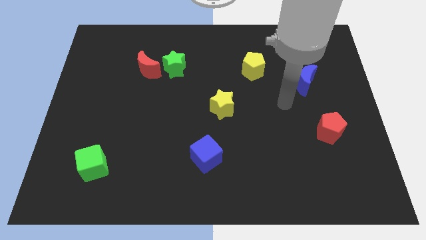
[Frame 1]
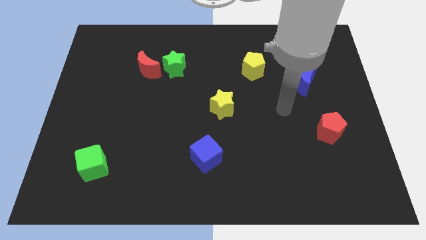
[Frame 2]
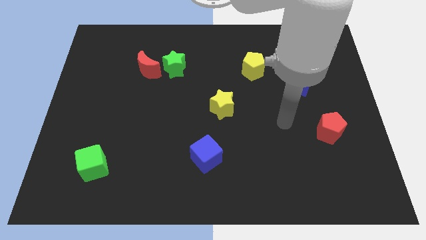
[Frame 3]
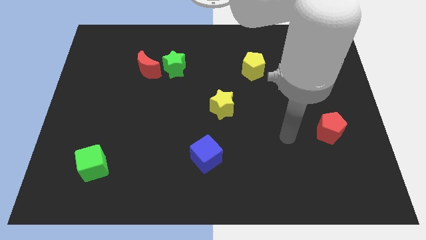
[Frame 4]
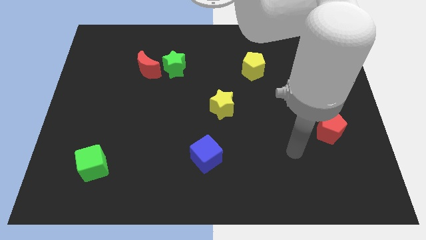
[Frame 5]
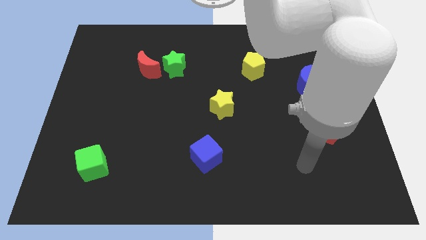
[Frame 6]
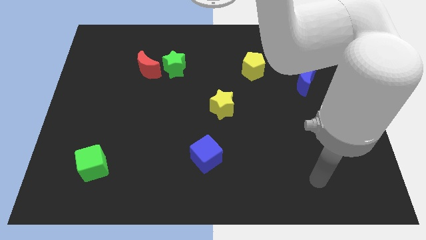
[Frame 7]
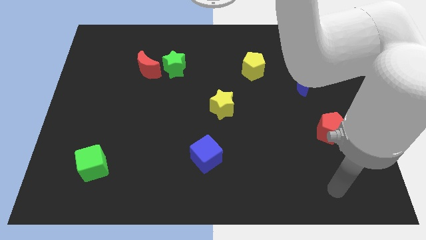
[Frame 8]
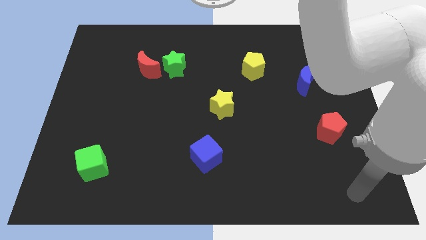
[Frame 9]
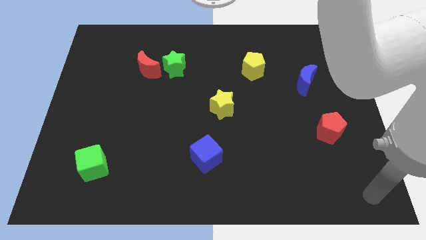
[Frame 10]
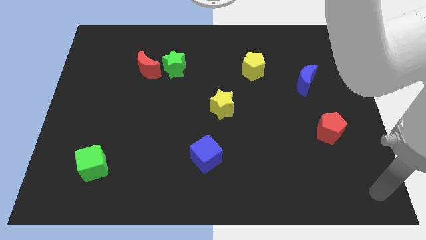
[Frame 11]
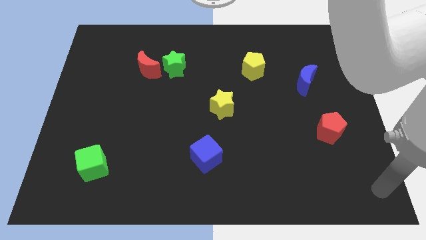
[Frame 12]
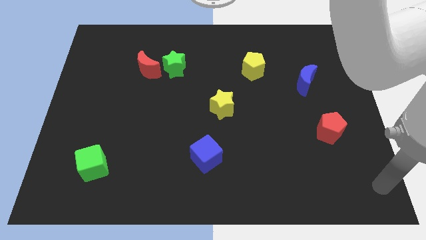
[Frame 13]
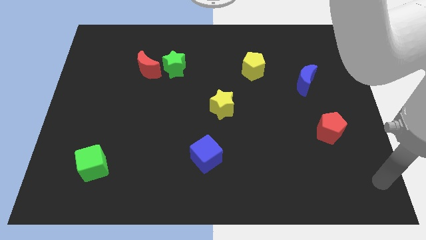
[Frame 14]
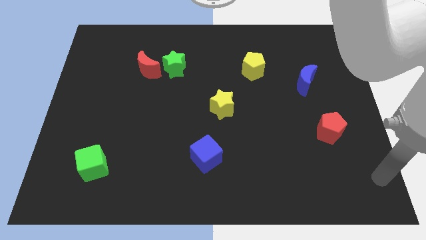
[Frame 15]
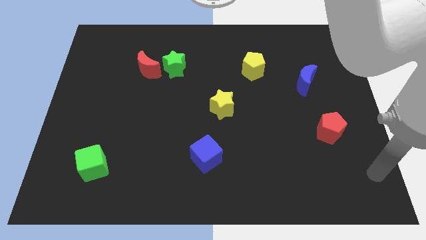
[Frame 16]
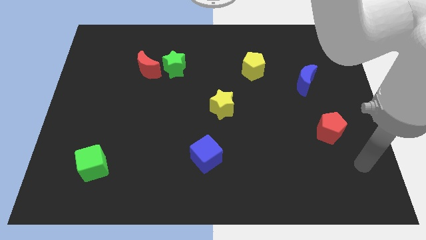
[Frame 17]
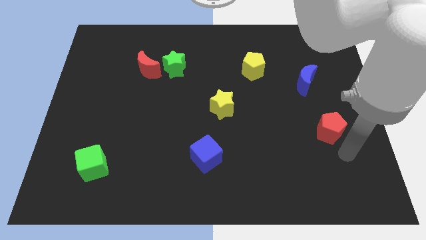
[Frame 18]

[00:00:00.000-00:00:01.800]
point your arm diagonal below the red pentagon

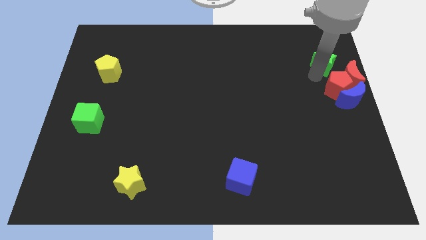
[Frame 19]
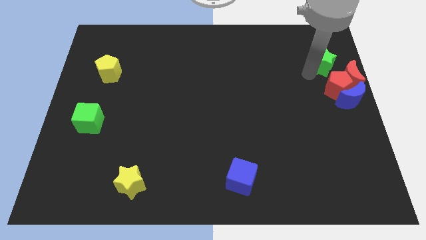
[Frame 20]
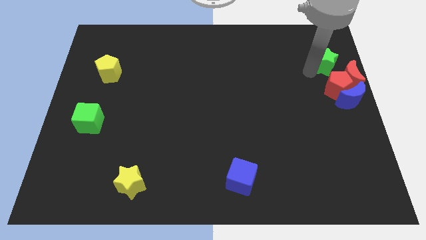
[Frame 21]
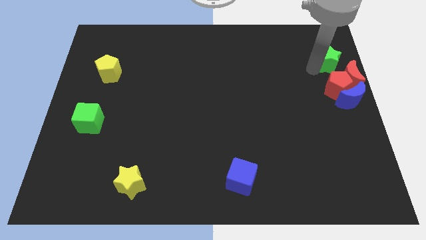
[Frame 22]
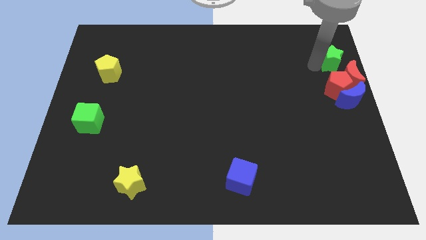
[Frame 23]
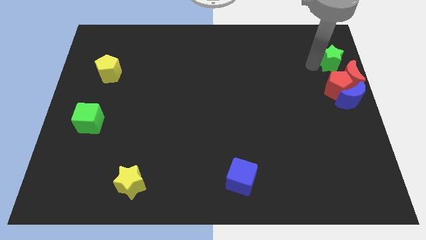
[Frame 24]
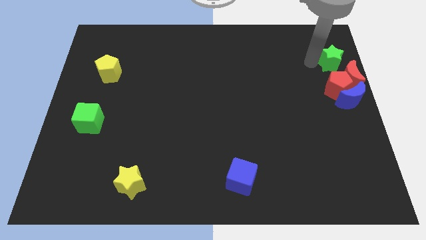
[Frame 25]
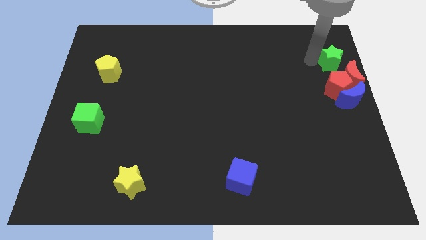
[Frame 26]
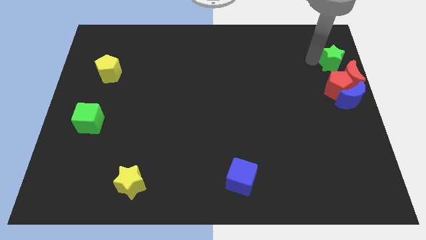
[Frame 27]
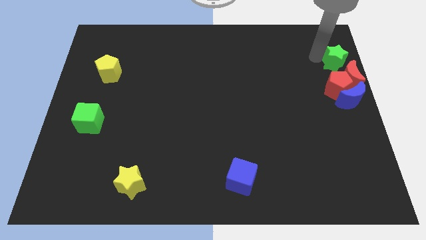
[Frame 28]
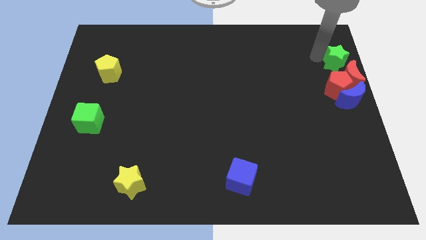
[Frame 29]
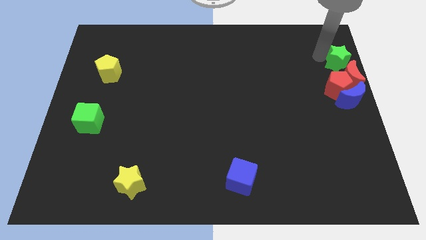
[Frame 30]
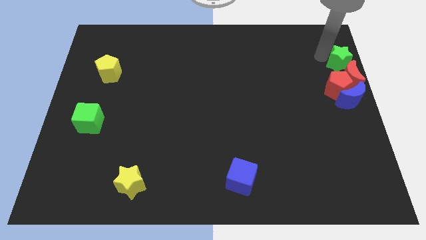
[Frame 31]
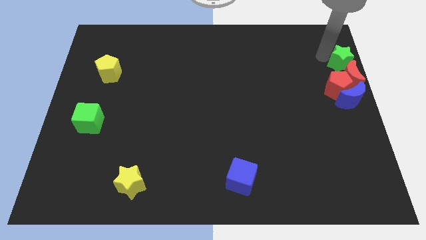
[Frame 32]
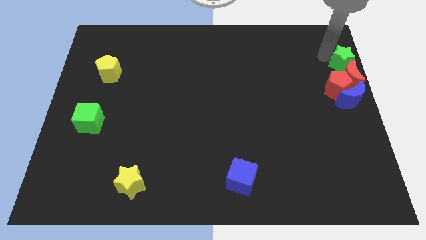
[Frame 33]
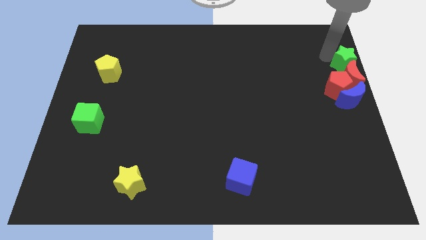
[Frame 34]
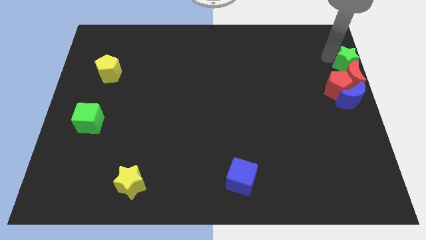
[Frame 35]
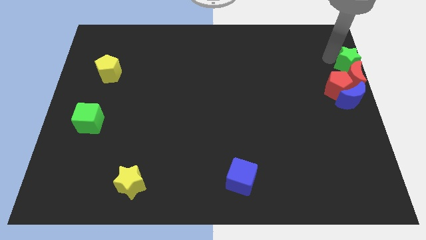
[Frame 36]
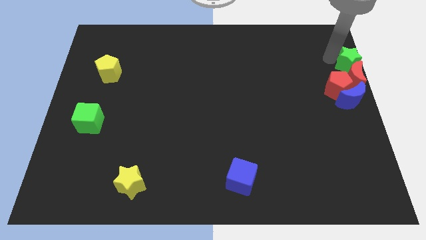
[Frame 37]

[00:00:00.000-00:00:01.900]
move the green star into the red crescent from the top

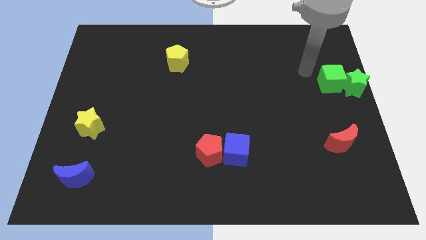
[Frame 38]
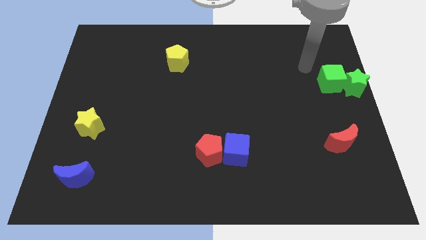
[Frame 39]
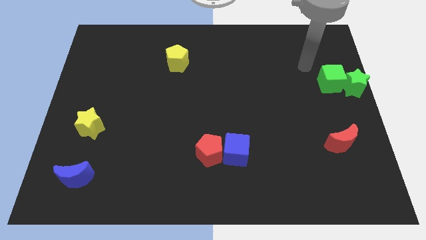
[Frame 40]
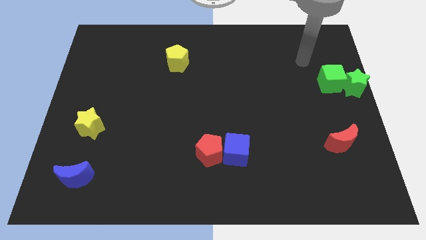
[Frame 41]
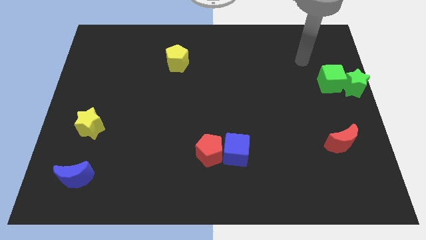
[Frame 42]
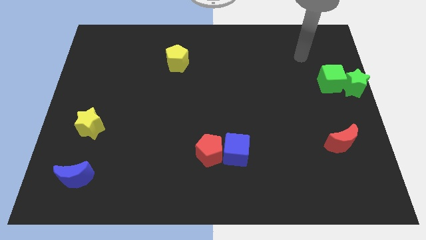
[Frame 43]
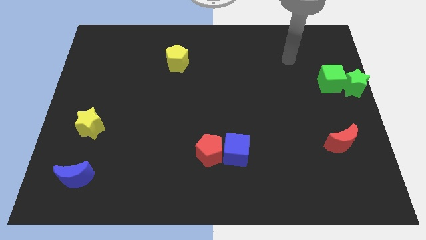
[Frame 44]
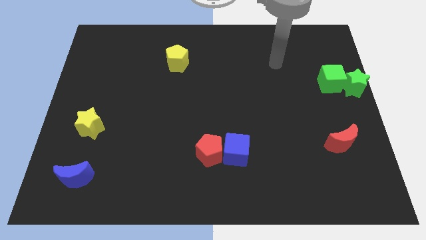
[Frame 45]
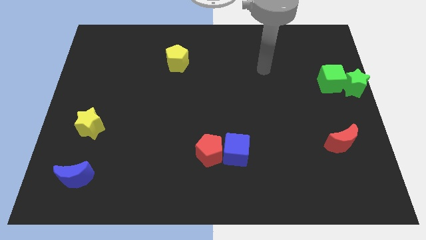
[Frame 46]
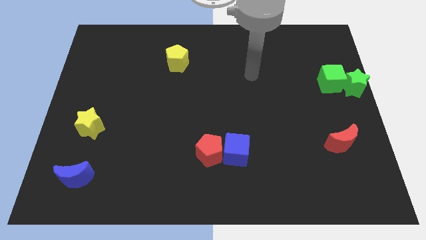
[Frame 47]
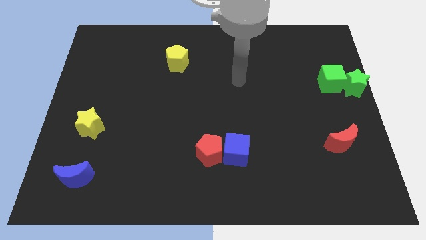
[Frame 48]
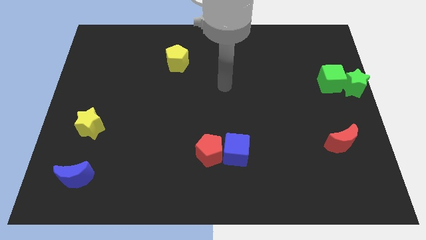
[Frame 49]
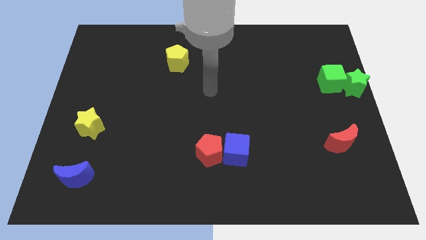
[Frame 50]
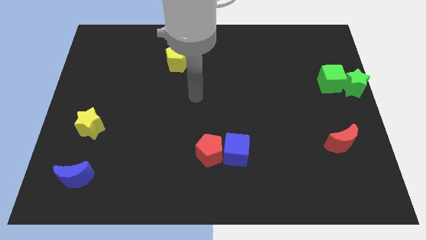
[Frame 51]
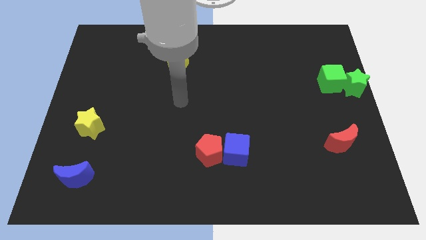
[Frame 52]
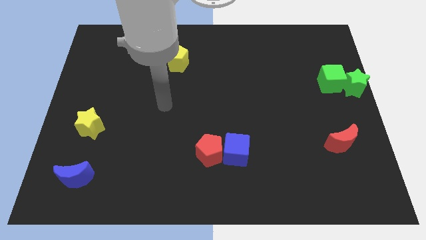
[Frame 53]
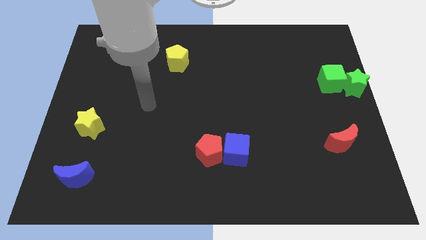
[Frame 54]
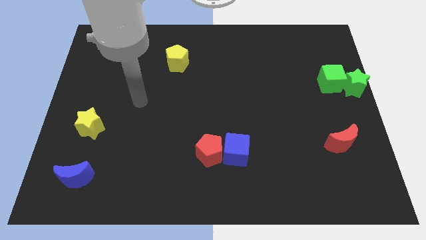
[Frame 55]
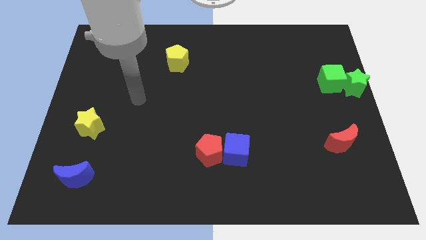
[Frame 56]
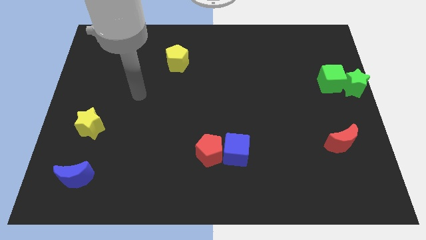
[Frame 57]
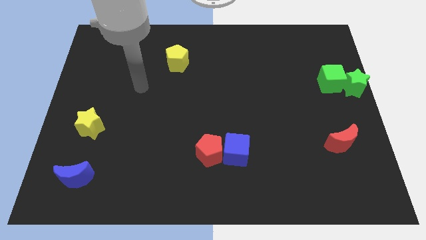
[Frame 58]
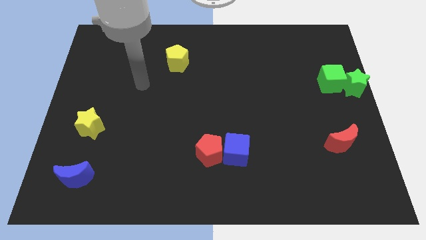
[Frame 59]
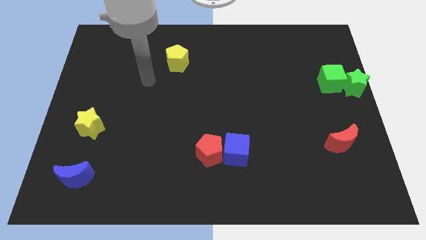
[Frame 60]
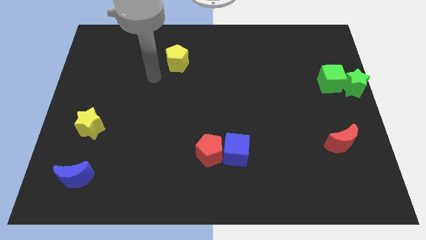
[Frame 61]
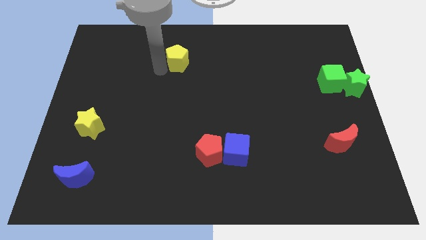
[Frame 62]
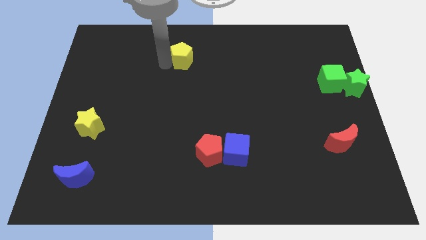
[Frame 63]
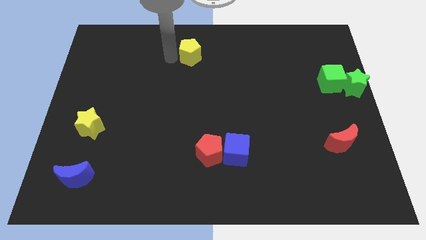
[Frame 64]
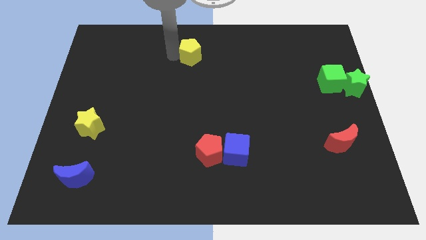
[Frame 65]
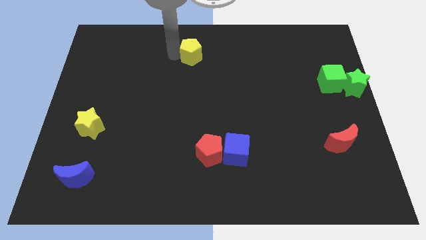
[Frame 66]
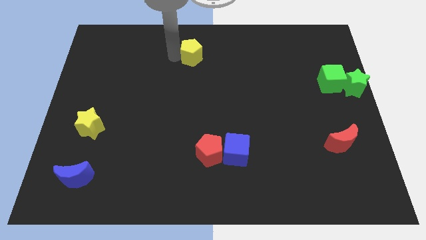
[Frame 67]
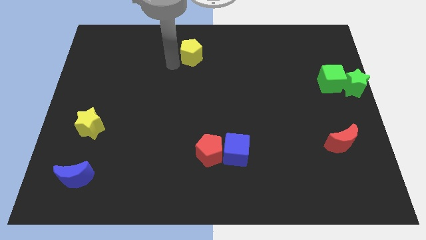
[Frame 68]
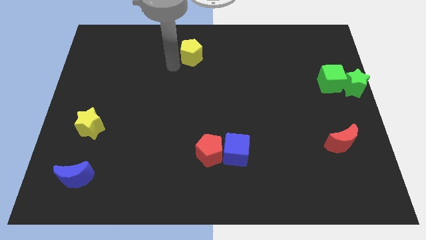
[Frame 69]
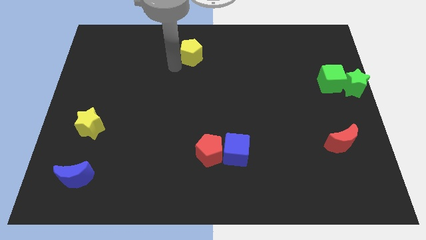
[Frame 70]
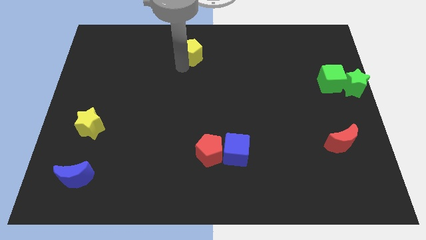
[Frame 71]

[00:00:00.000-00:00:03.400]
move yellow pentagon slightly diagonally

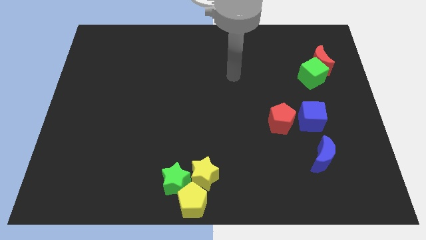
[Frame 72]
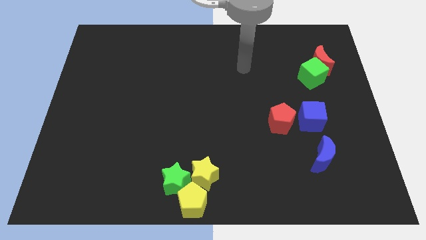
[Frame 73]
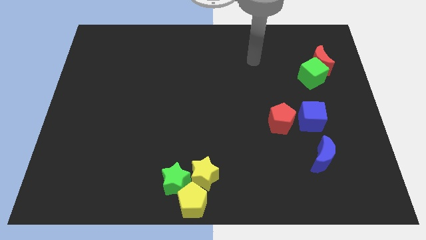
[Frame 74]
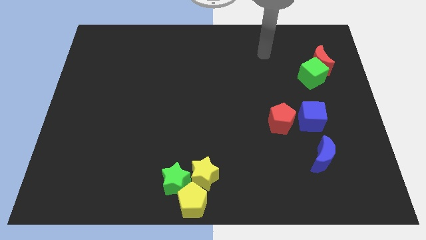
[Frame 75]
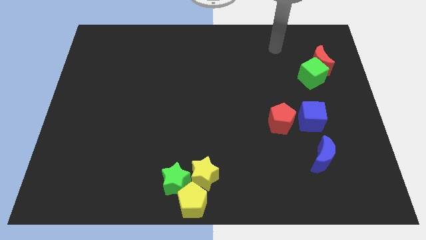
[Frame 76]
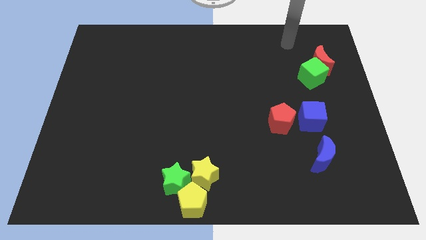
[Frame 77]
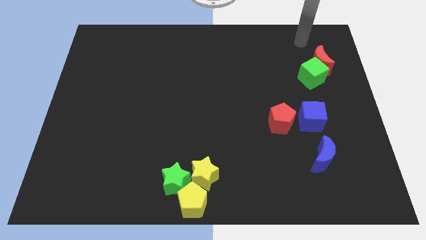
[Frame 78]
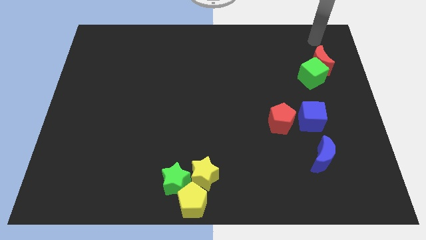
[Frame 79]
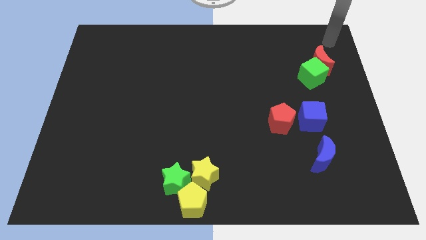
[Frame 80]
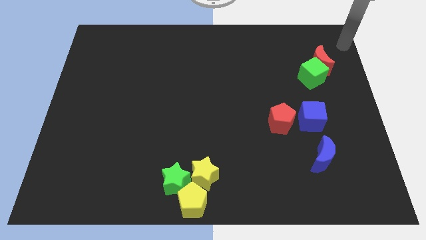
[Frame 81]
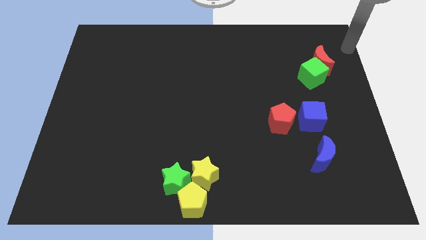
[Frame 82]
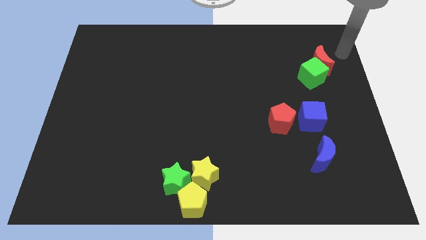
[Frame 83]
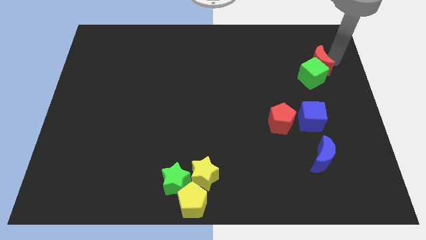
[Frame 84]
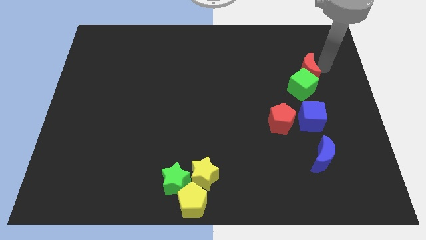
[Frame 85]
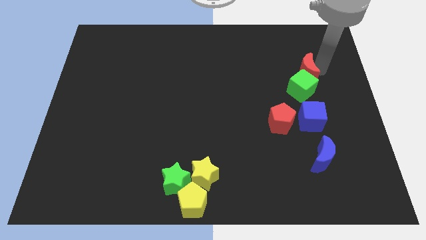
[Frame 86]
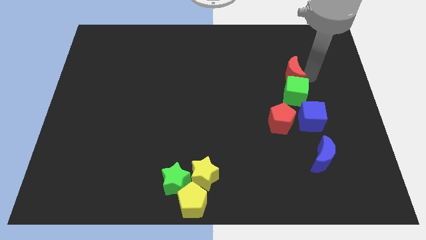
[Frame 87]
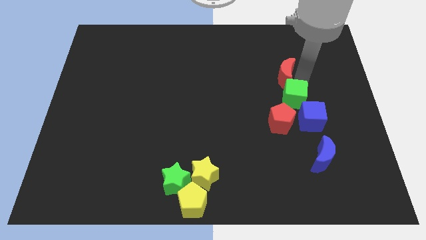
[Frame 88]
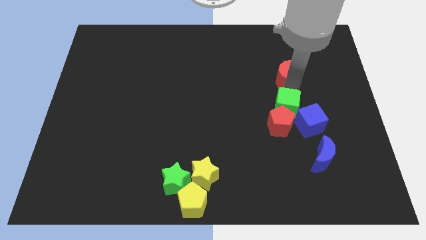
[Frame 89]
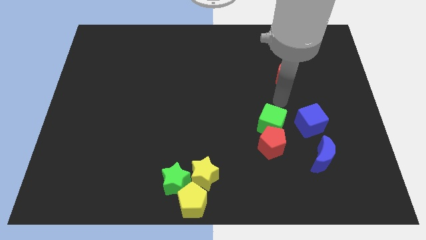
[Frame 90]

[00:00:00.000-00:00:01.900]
push green cube downwards
